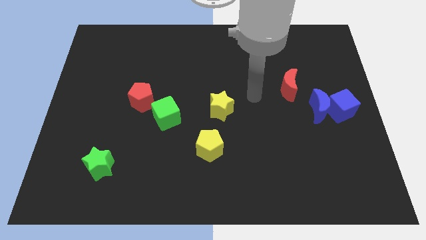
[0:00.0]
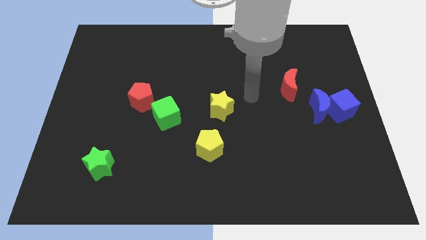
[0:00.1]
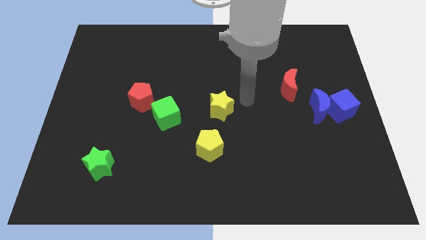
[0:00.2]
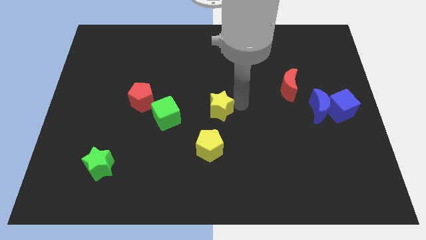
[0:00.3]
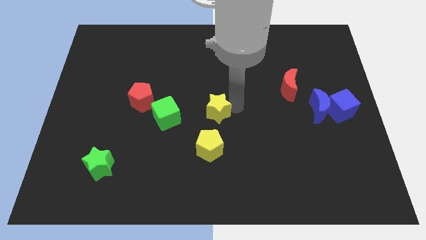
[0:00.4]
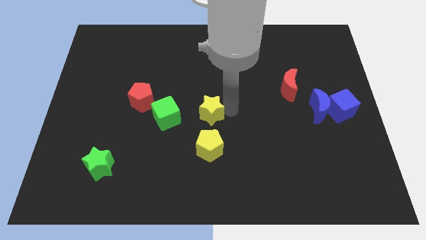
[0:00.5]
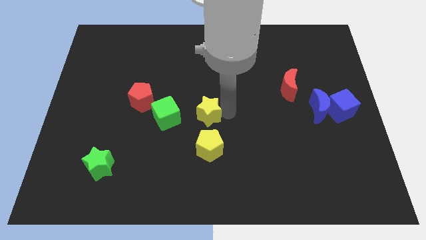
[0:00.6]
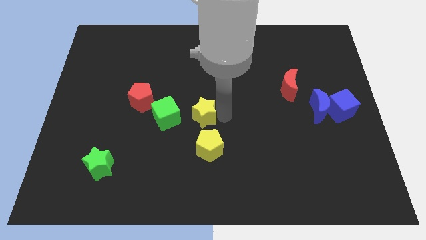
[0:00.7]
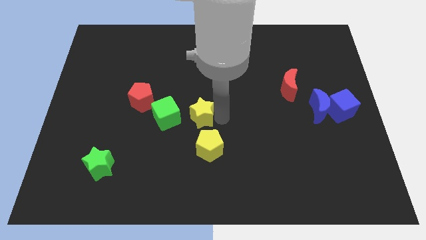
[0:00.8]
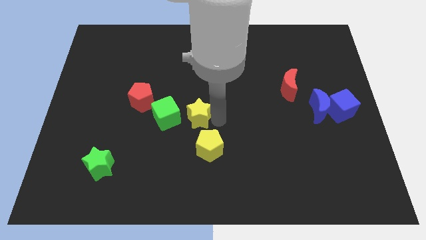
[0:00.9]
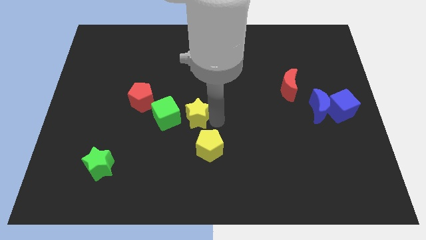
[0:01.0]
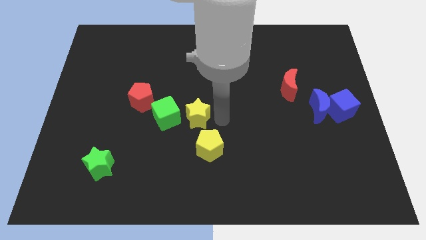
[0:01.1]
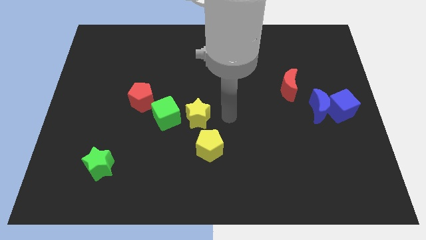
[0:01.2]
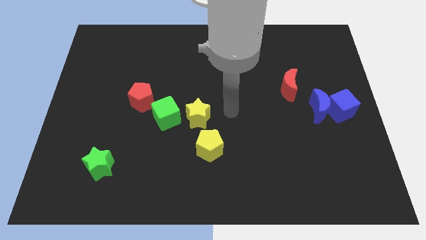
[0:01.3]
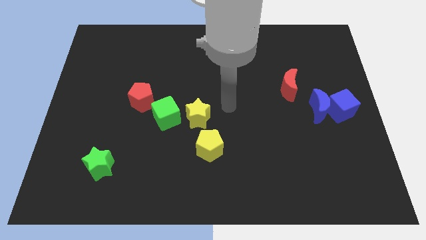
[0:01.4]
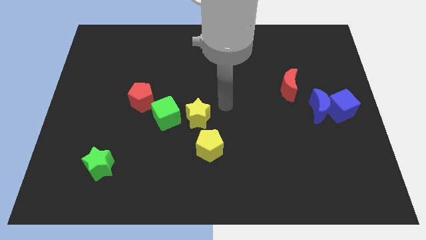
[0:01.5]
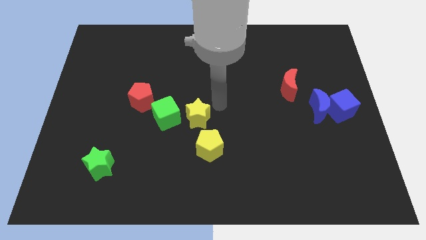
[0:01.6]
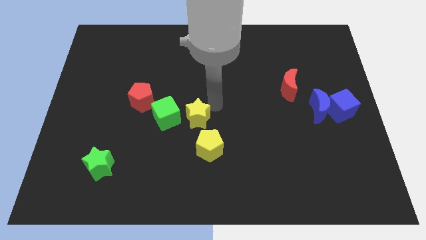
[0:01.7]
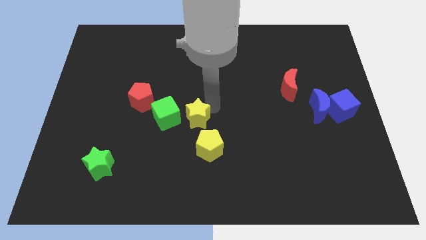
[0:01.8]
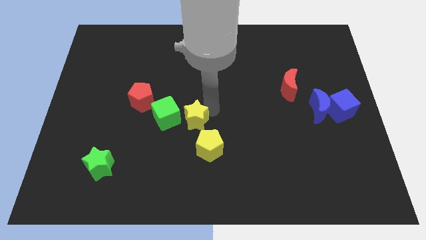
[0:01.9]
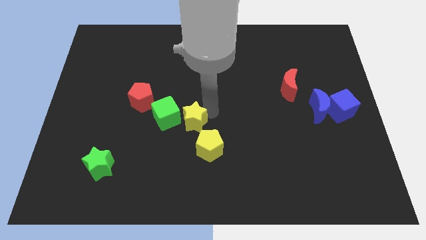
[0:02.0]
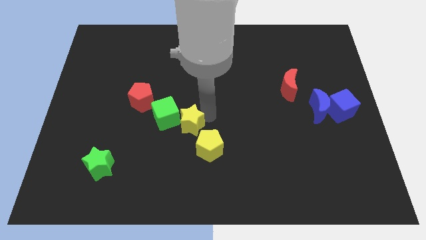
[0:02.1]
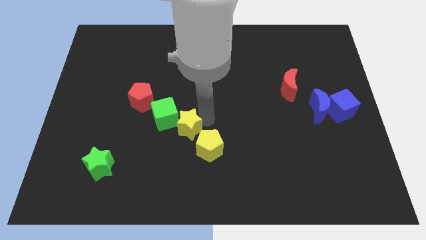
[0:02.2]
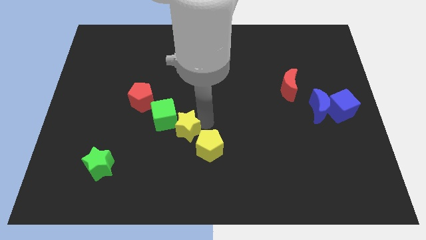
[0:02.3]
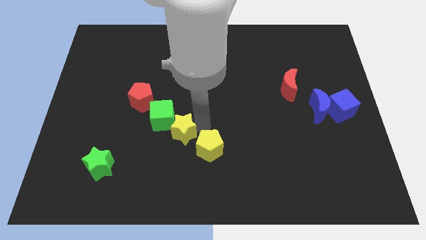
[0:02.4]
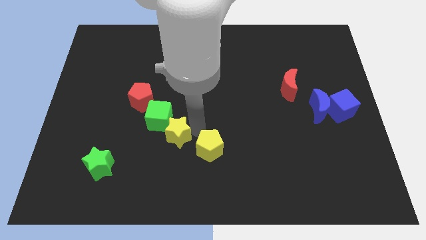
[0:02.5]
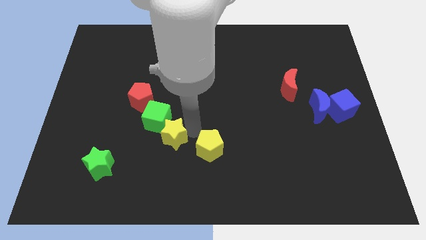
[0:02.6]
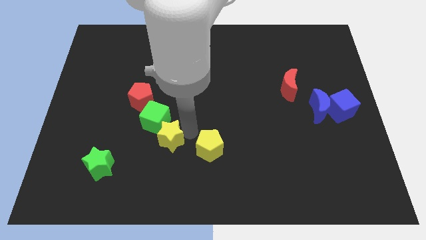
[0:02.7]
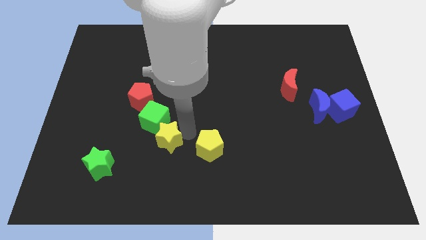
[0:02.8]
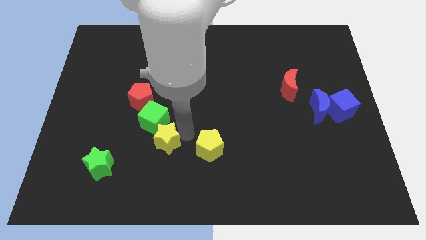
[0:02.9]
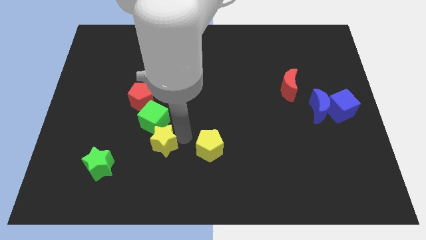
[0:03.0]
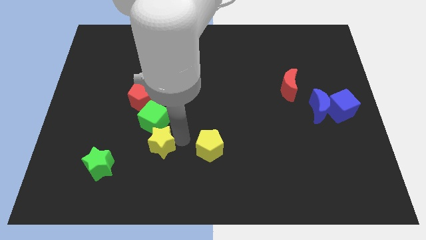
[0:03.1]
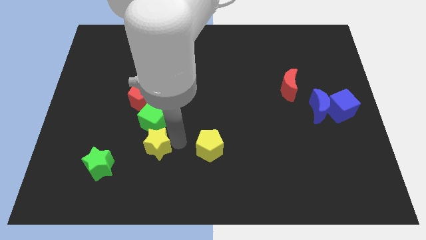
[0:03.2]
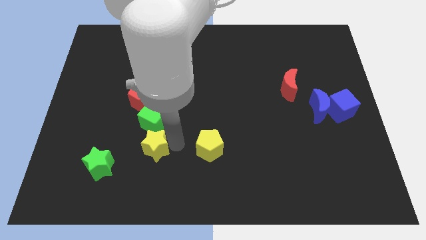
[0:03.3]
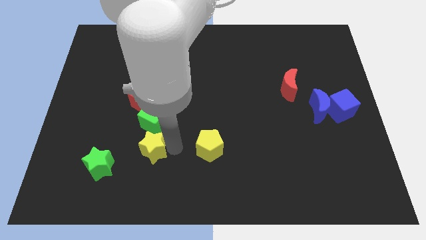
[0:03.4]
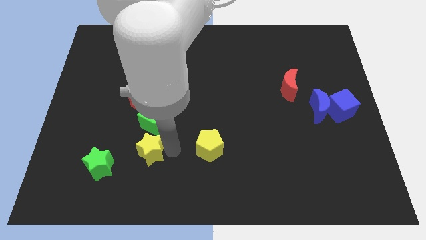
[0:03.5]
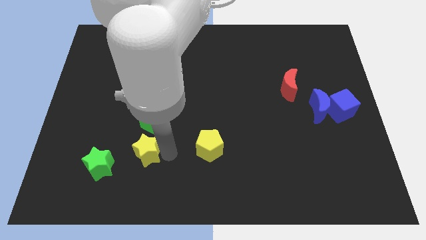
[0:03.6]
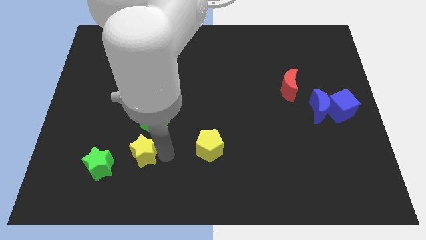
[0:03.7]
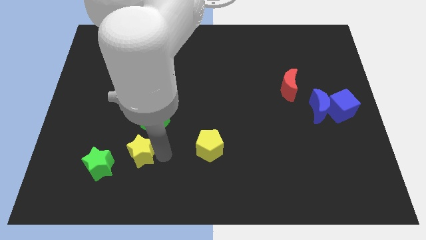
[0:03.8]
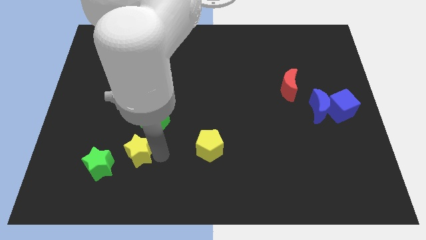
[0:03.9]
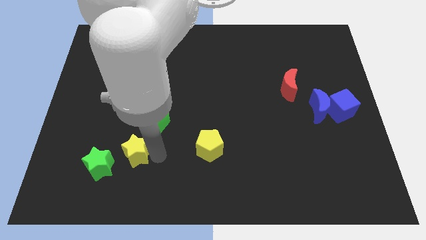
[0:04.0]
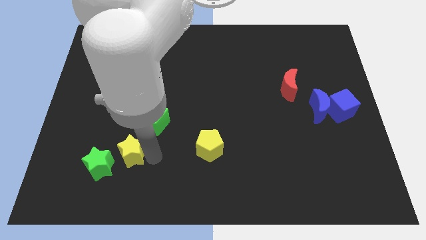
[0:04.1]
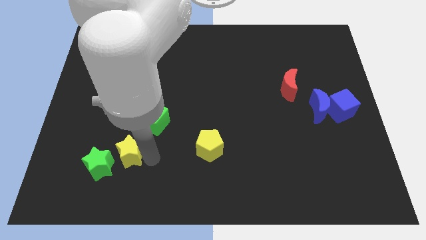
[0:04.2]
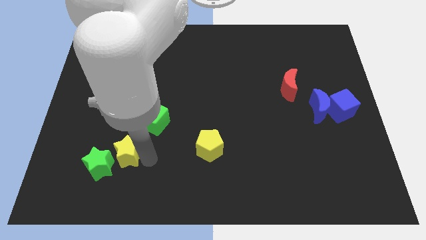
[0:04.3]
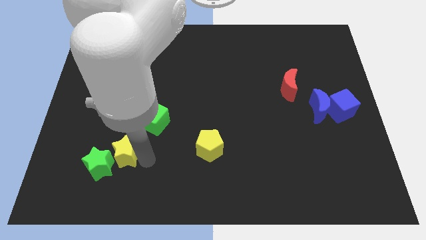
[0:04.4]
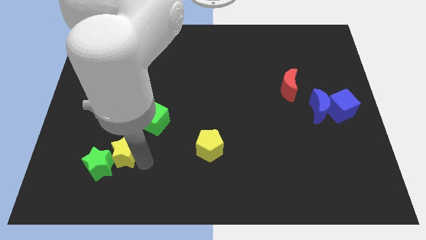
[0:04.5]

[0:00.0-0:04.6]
put the yellow star next to the green star

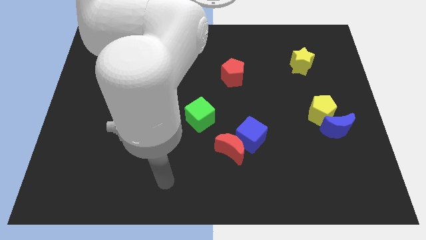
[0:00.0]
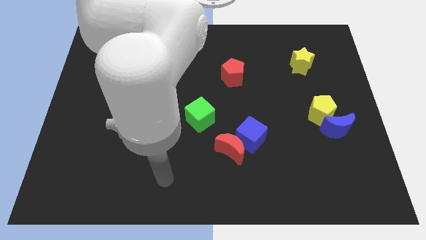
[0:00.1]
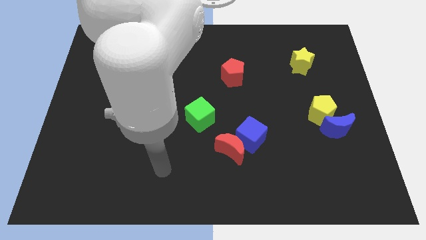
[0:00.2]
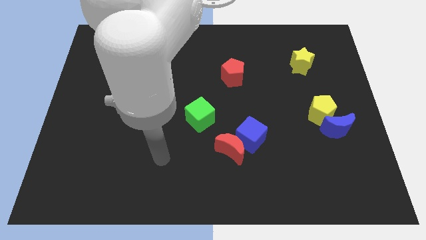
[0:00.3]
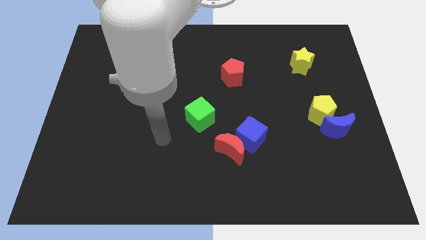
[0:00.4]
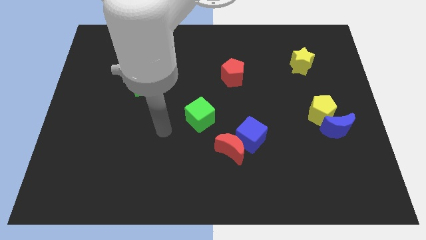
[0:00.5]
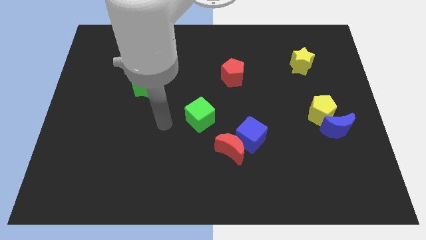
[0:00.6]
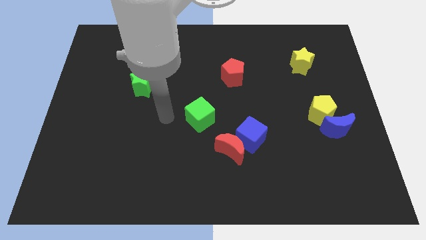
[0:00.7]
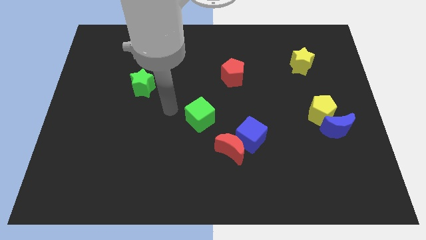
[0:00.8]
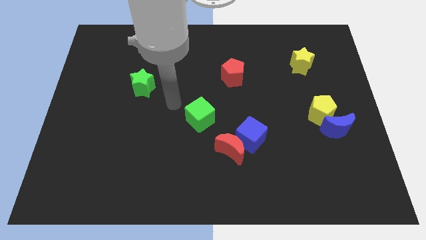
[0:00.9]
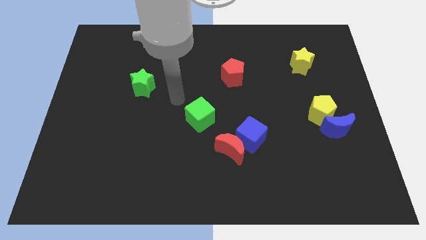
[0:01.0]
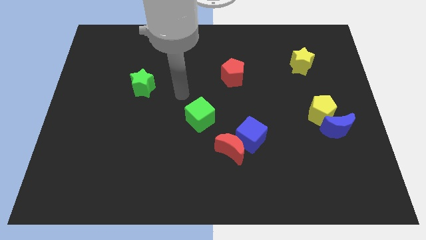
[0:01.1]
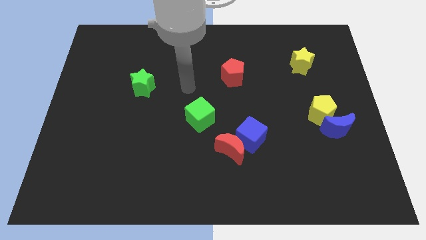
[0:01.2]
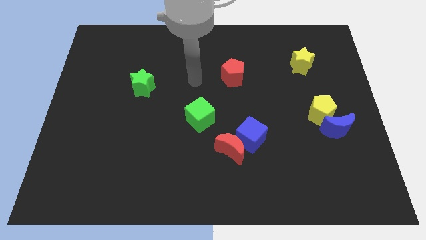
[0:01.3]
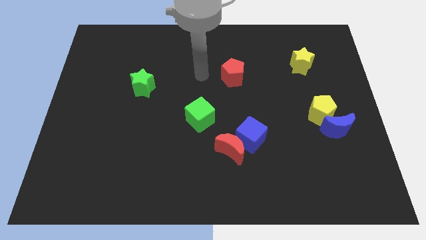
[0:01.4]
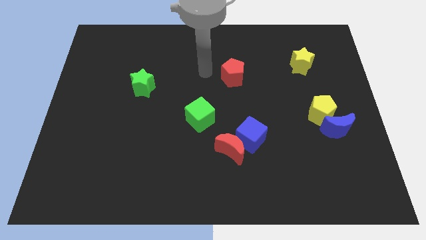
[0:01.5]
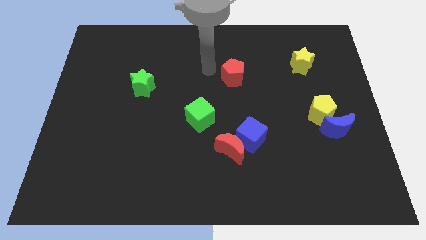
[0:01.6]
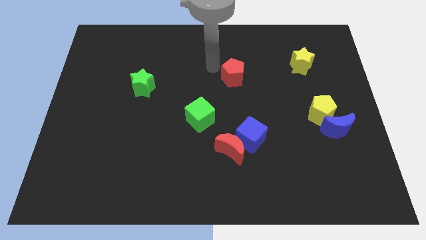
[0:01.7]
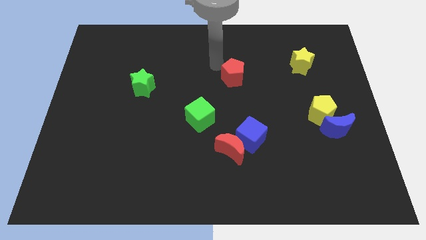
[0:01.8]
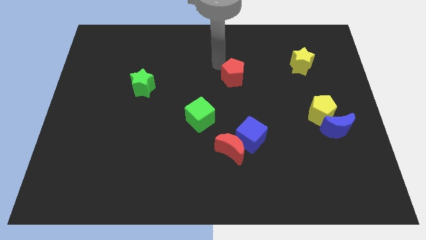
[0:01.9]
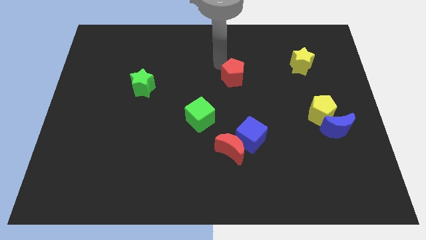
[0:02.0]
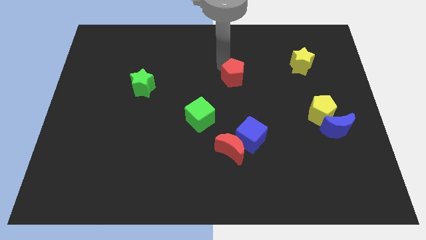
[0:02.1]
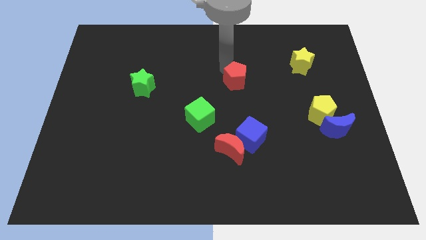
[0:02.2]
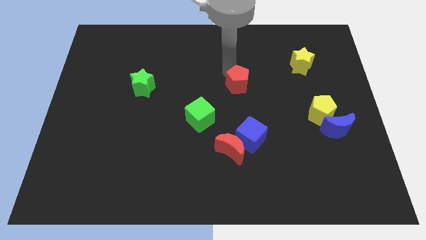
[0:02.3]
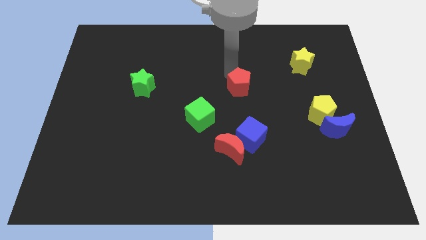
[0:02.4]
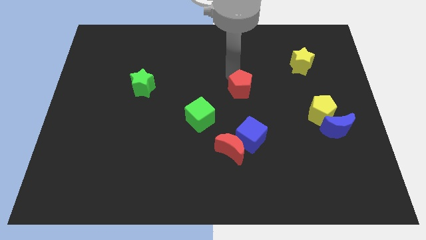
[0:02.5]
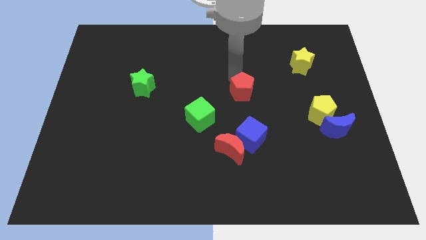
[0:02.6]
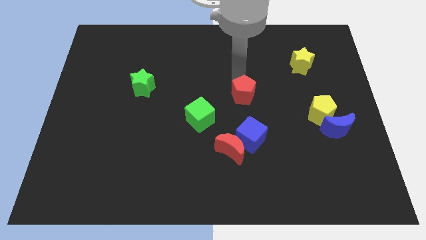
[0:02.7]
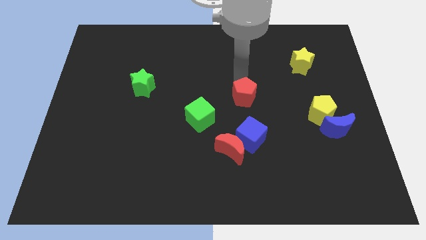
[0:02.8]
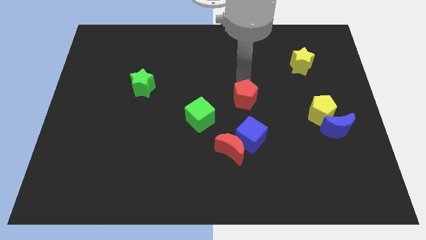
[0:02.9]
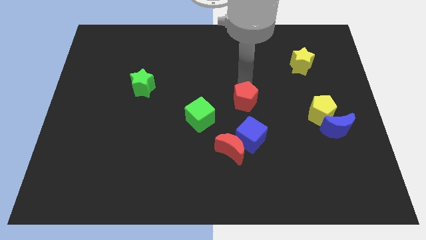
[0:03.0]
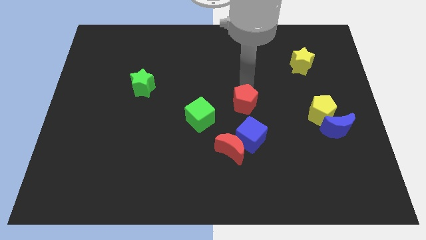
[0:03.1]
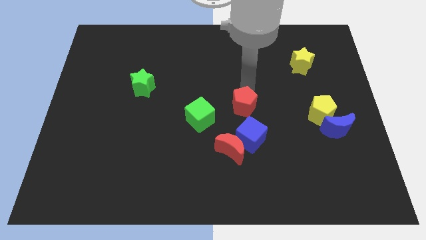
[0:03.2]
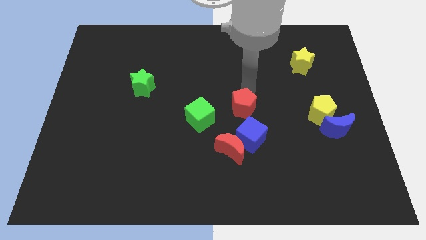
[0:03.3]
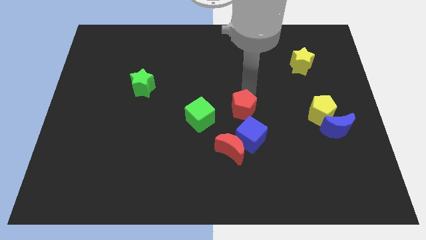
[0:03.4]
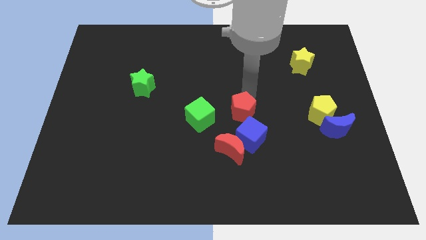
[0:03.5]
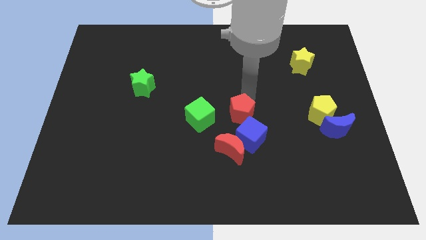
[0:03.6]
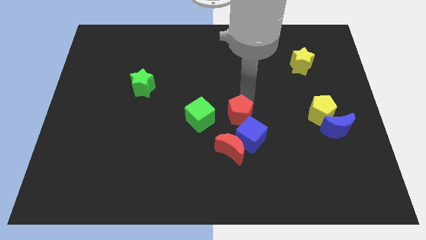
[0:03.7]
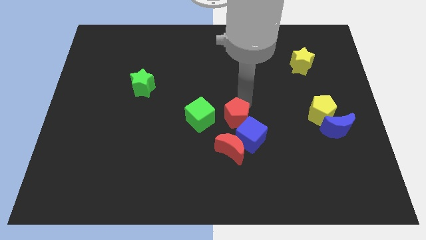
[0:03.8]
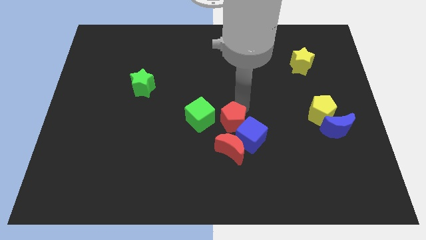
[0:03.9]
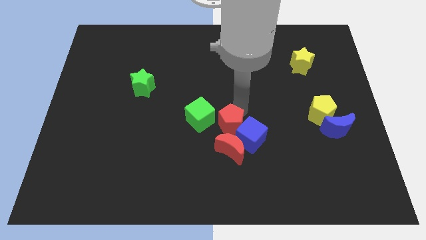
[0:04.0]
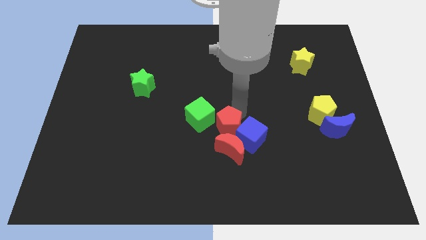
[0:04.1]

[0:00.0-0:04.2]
slide the red pentagon towards the blue cube
